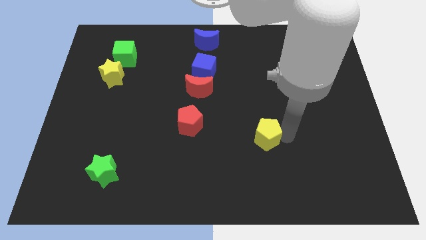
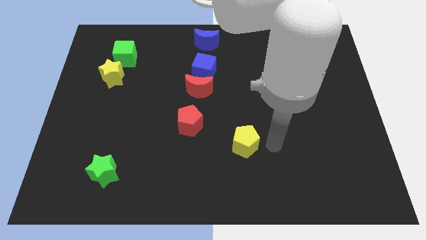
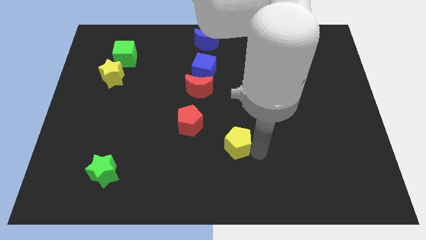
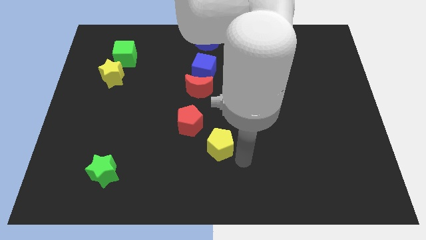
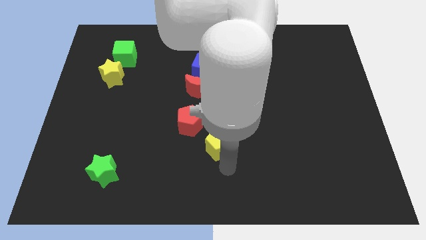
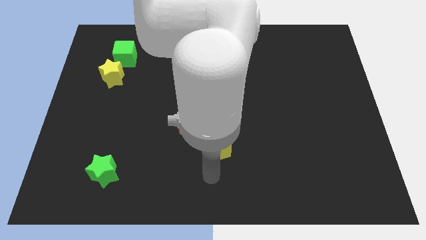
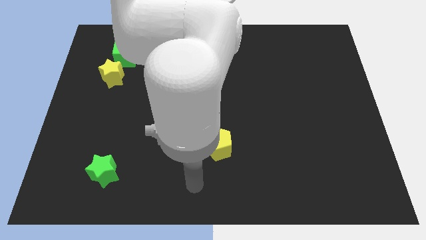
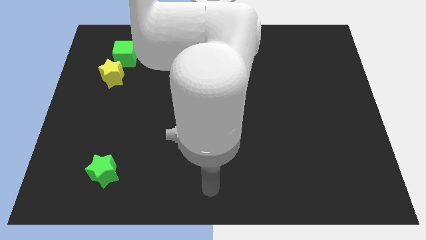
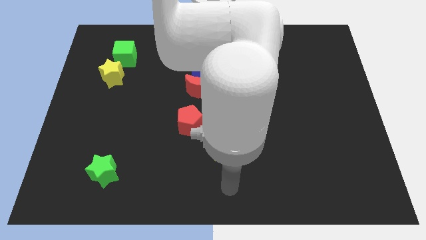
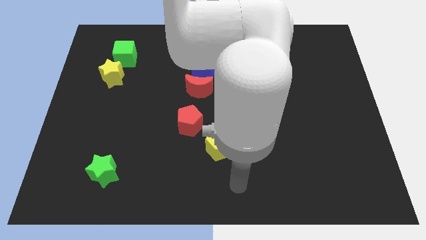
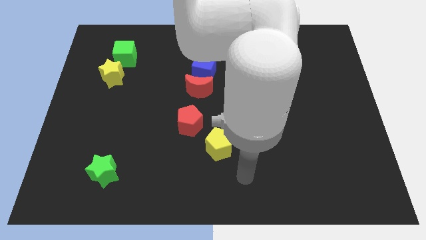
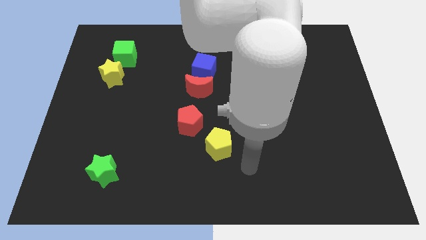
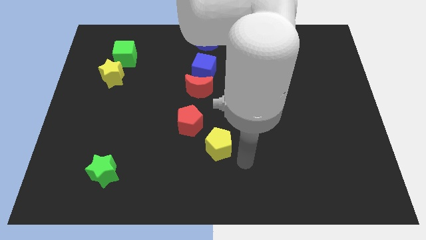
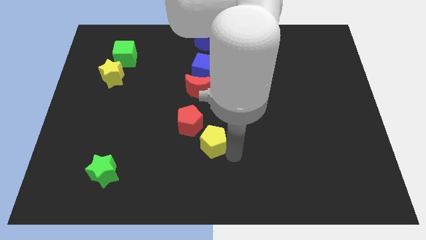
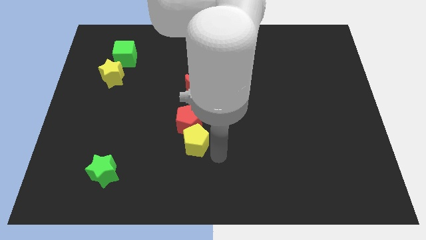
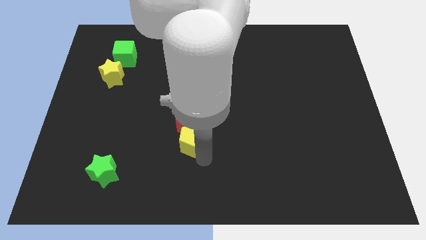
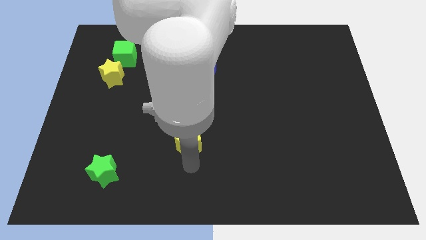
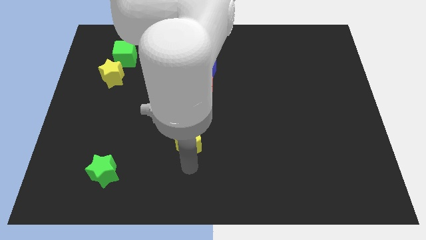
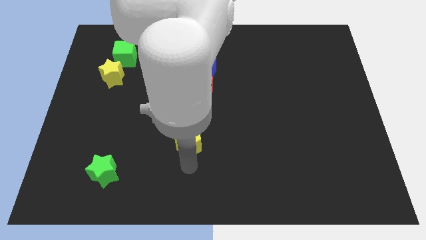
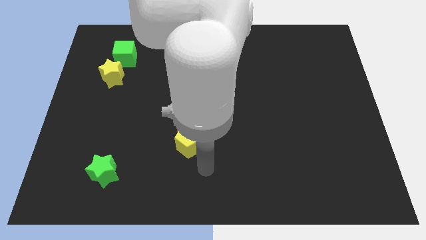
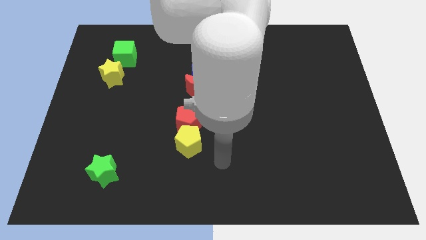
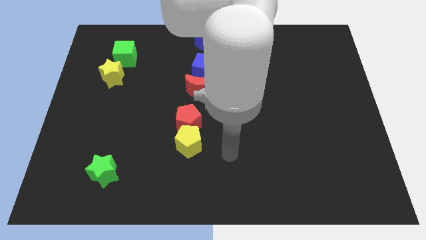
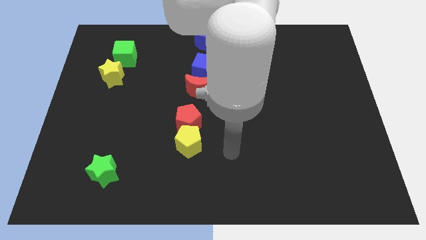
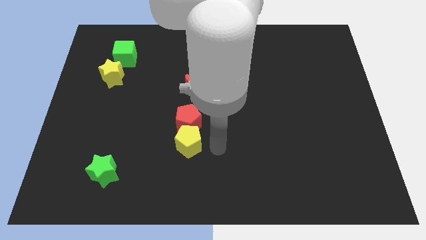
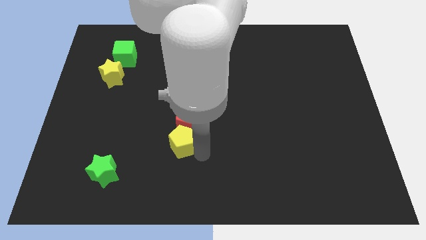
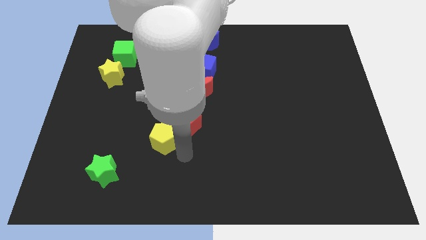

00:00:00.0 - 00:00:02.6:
move the yellow pentagon into the red pentagon

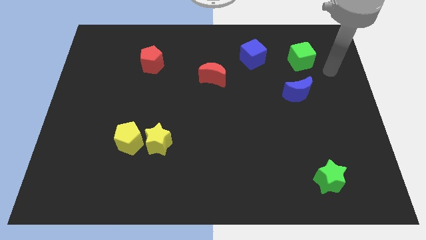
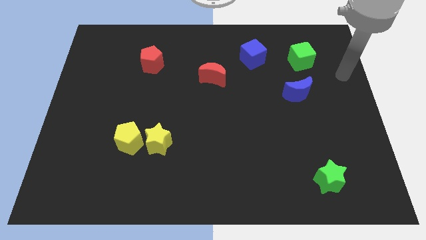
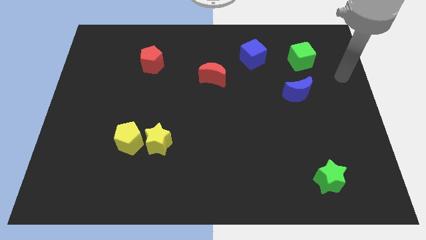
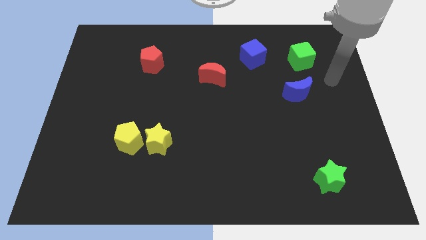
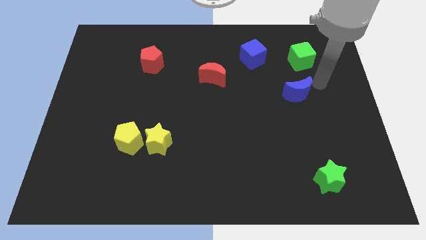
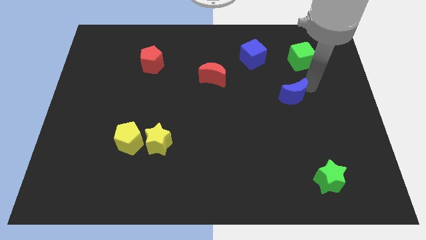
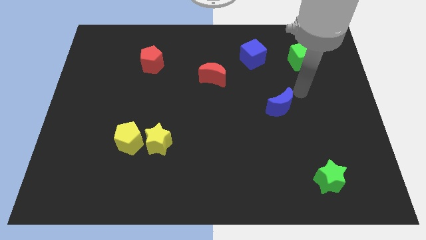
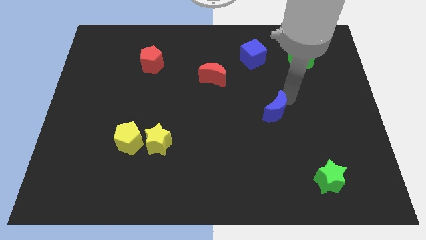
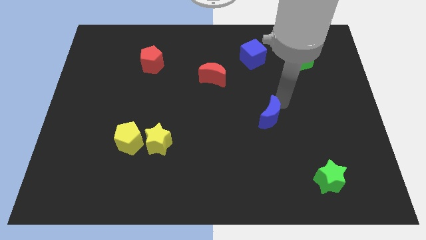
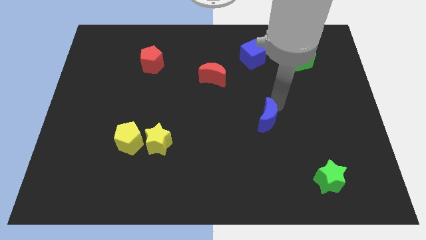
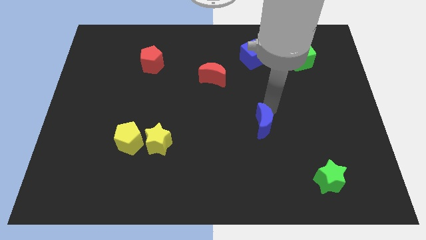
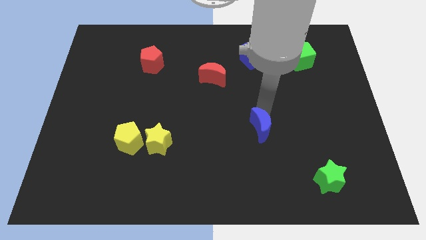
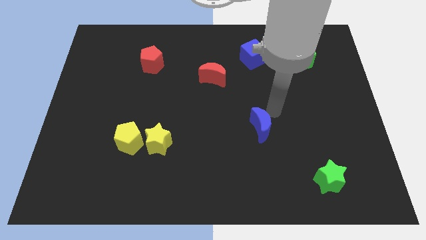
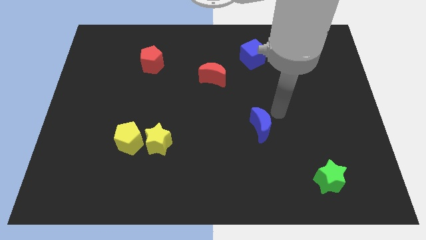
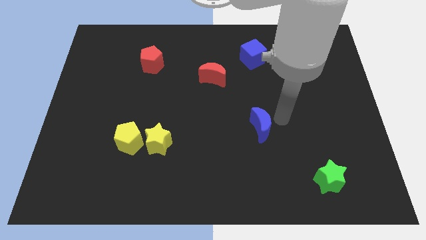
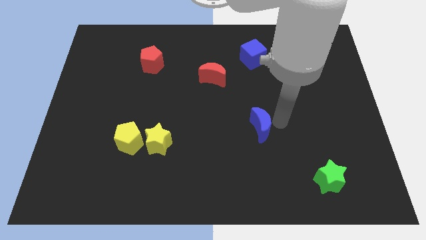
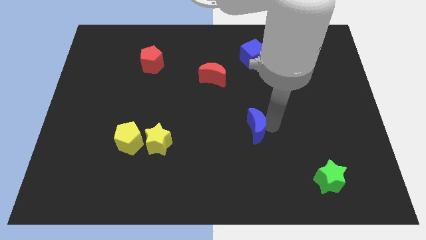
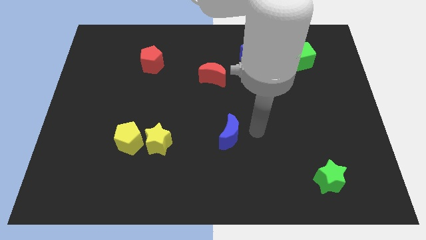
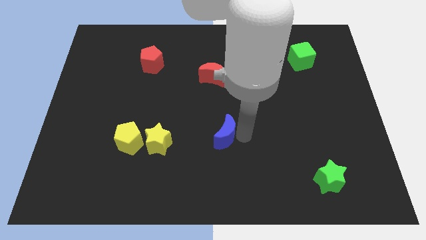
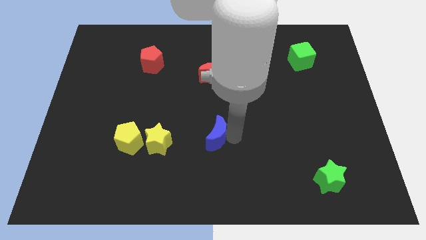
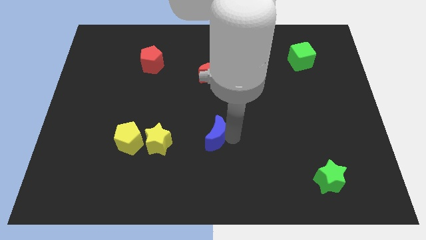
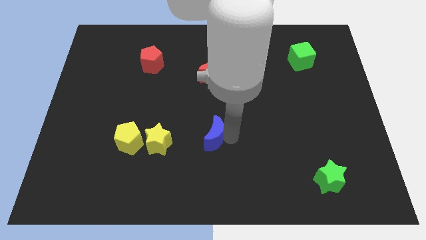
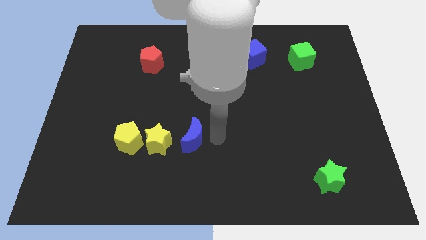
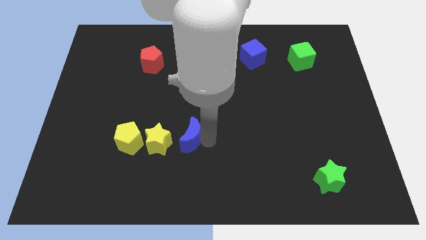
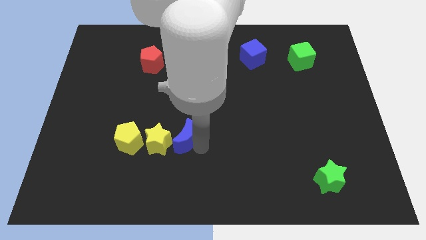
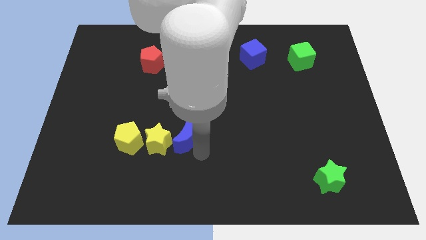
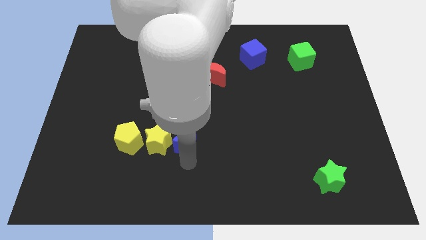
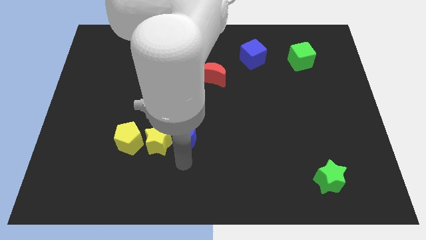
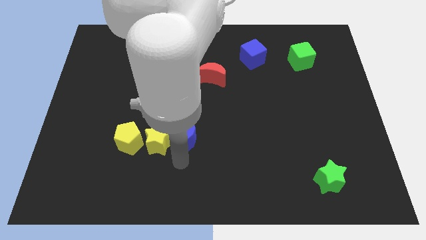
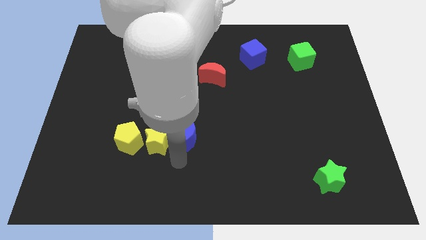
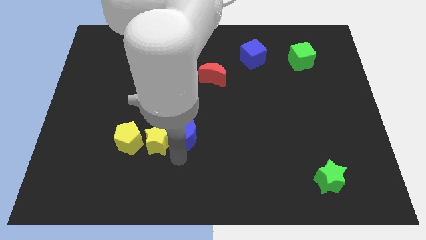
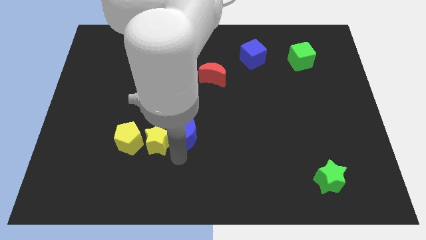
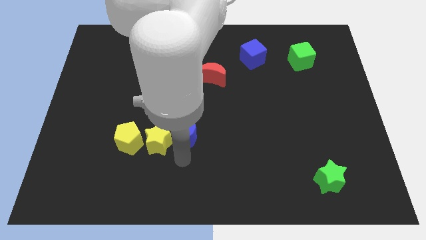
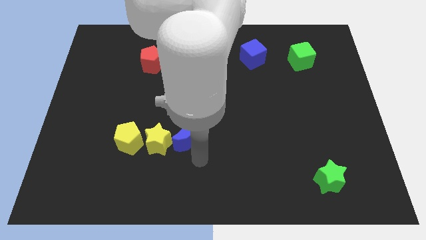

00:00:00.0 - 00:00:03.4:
move blue moon beside yellow star

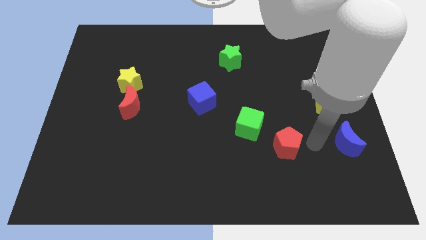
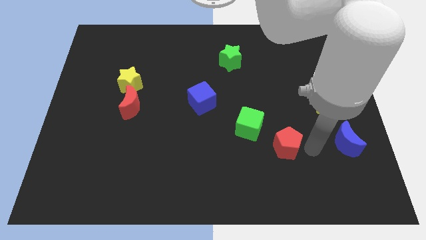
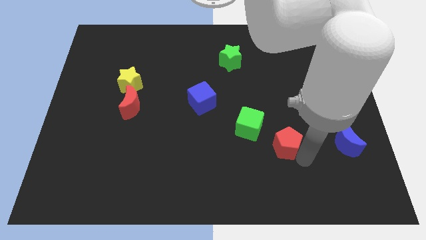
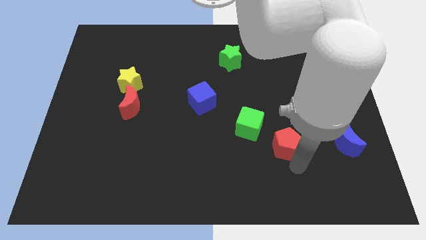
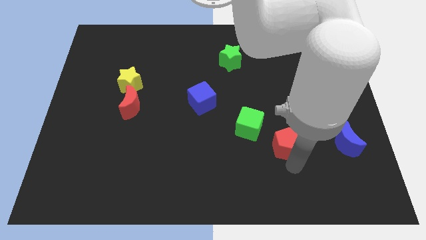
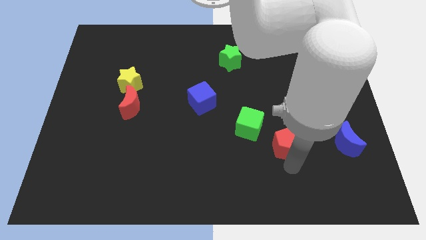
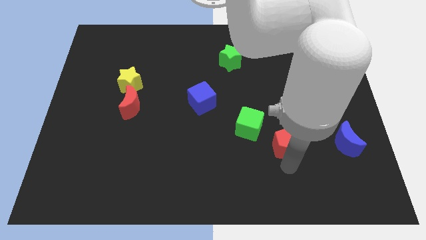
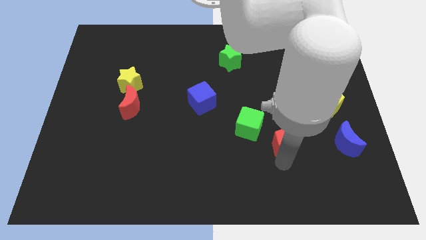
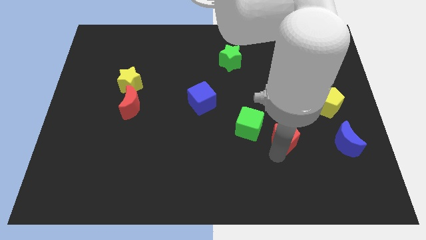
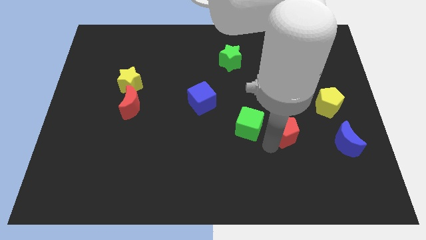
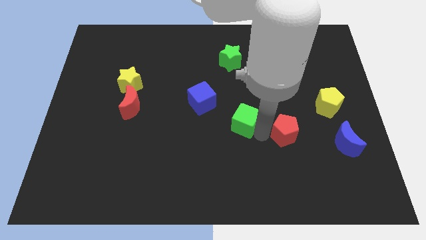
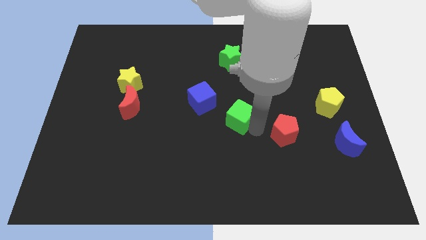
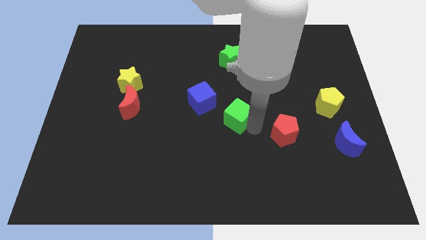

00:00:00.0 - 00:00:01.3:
push the green cube towards the blue cube

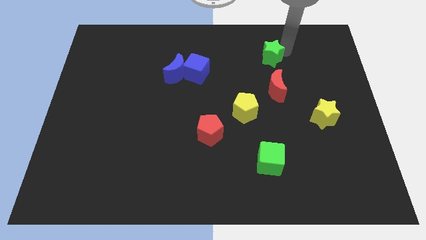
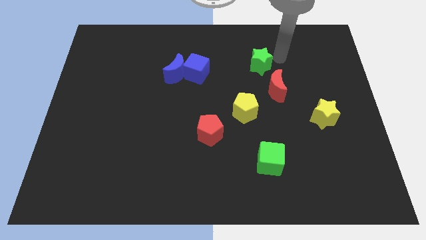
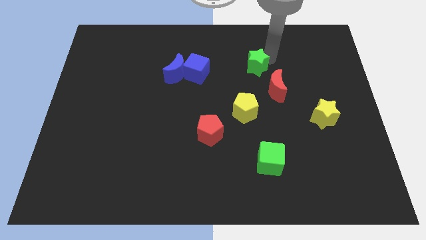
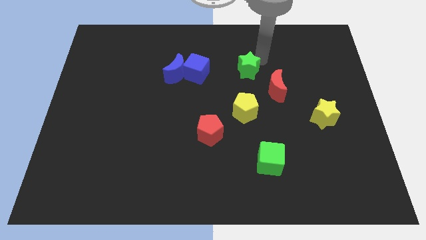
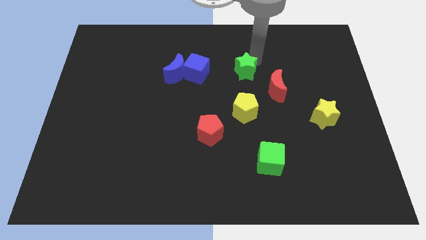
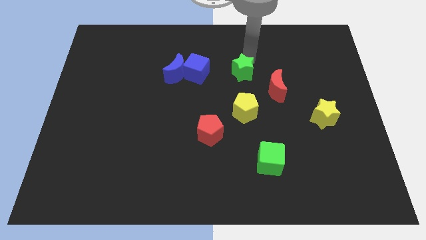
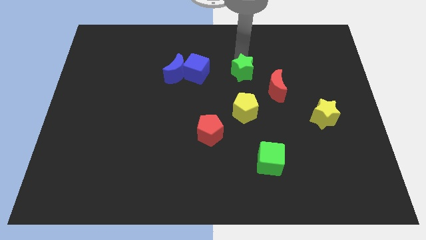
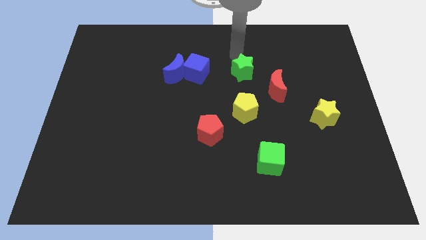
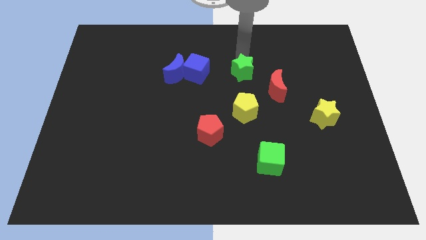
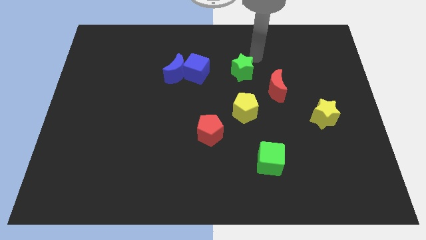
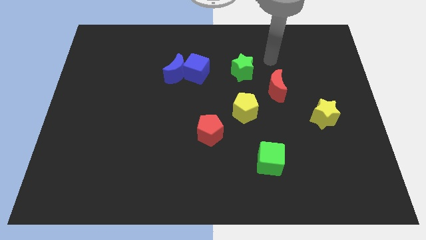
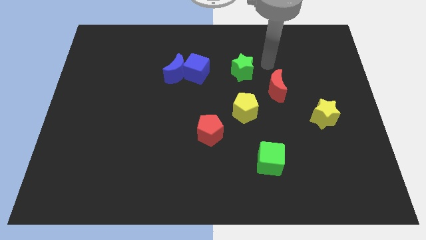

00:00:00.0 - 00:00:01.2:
place the green star above the yellow pentagon

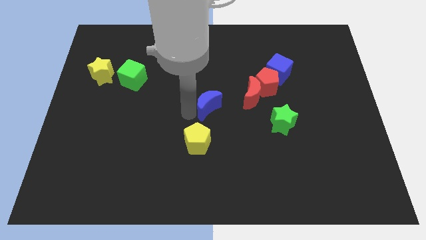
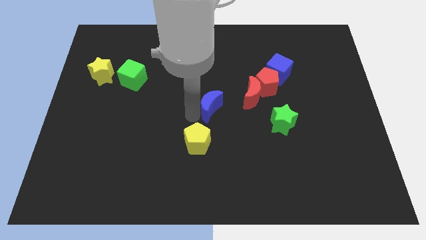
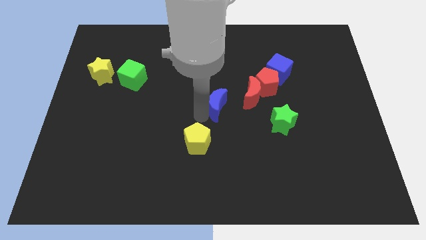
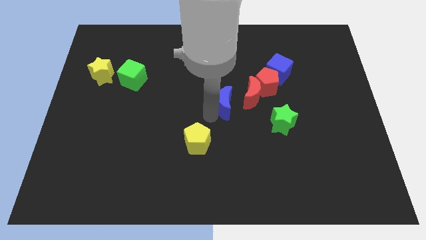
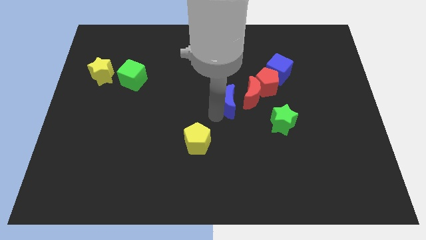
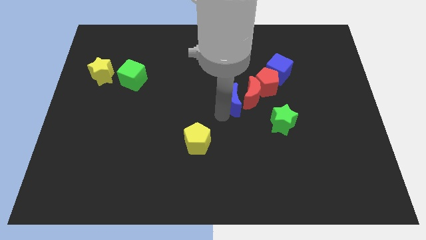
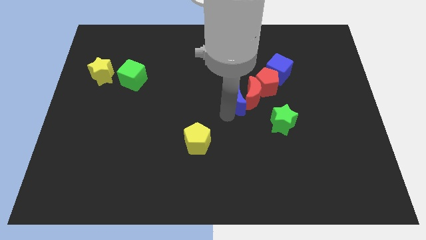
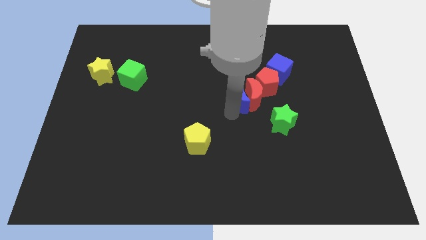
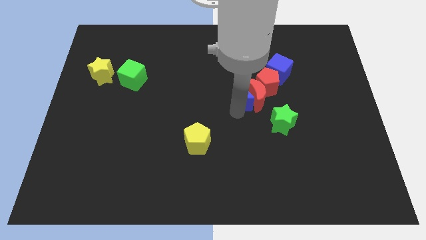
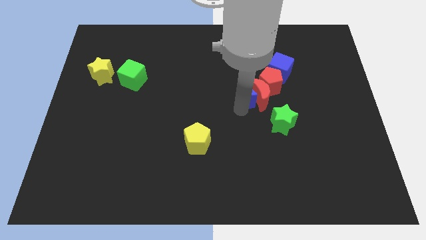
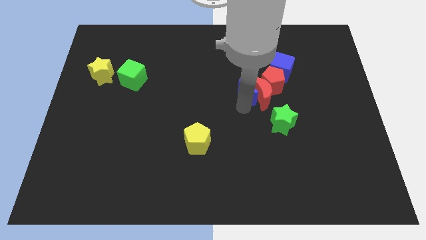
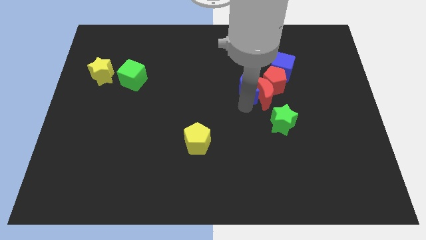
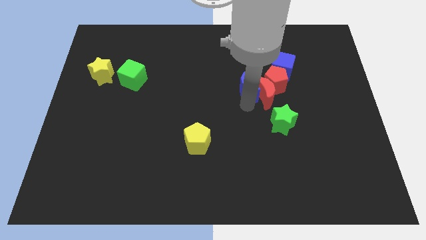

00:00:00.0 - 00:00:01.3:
push the blue crescent into the red crescent
